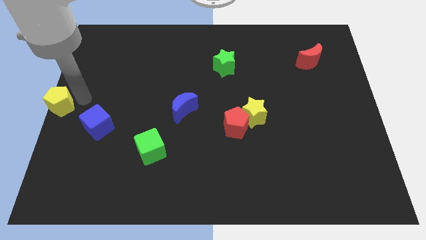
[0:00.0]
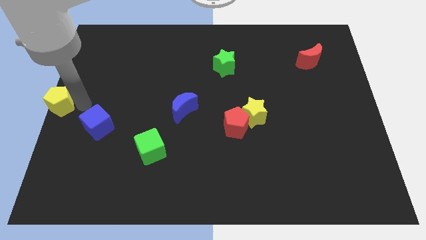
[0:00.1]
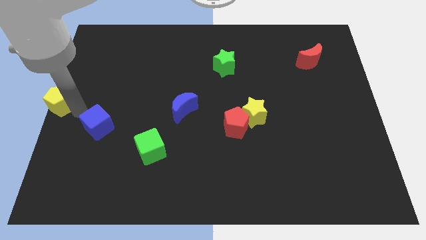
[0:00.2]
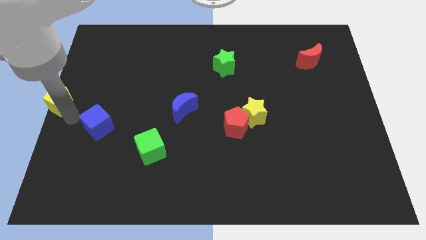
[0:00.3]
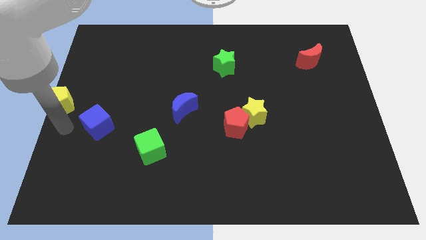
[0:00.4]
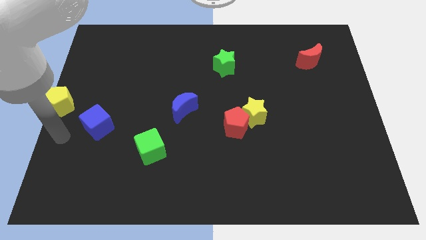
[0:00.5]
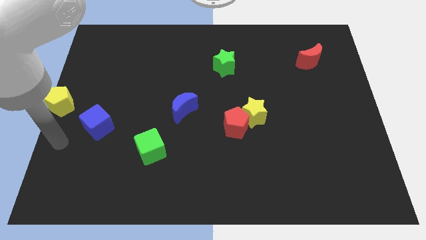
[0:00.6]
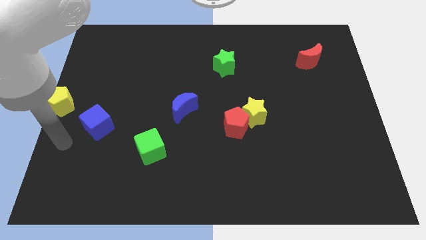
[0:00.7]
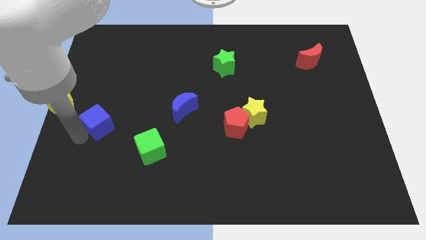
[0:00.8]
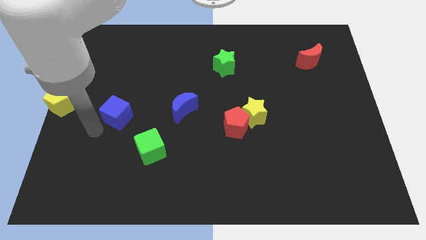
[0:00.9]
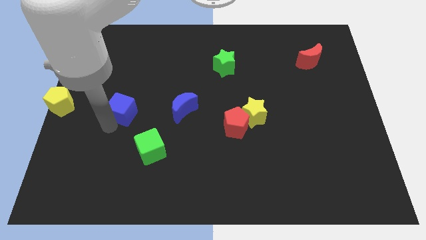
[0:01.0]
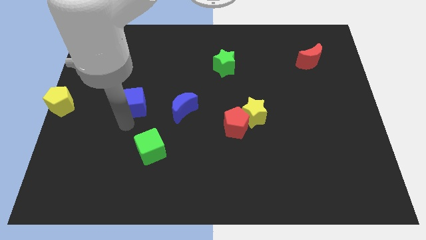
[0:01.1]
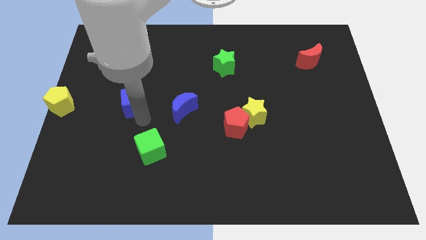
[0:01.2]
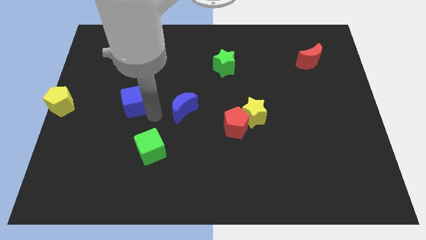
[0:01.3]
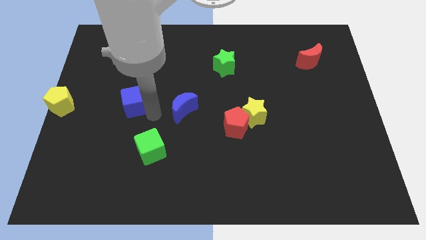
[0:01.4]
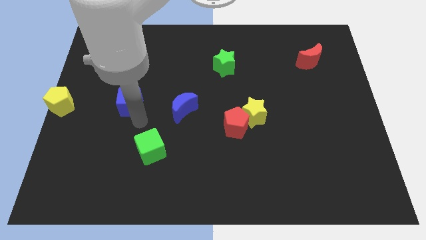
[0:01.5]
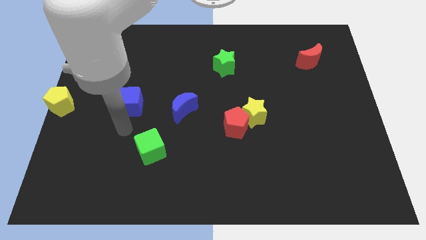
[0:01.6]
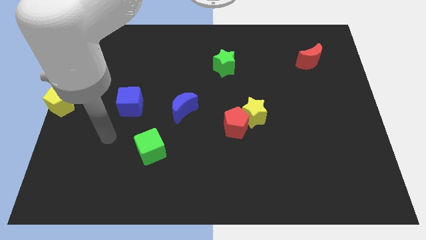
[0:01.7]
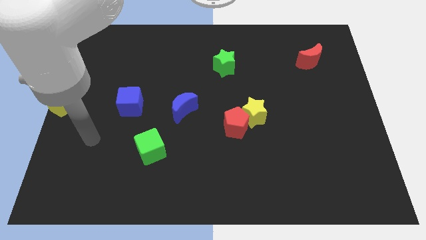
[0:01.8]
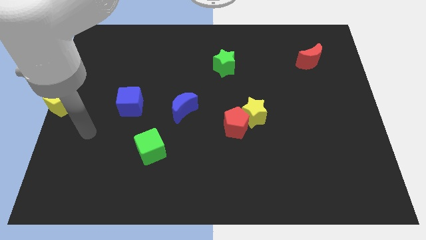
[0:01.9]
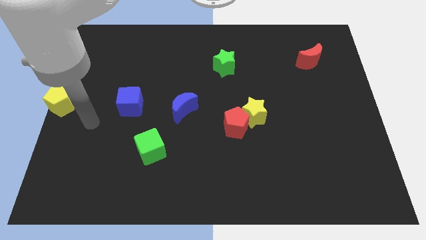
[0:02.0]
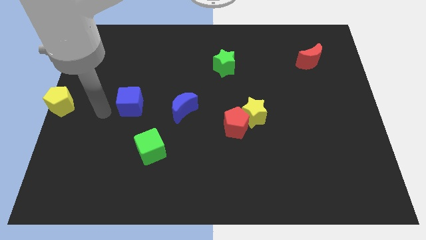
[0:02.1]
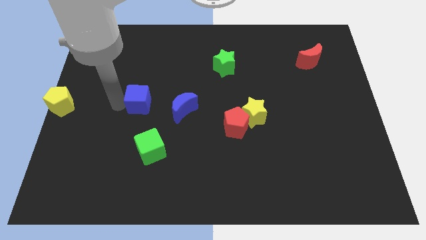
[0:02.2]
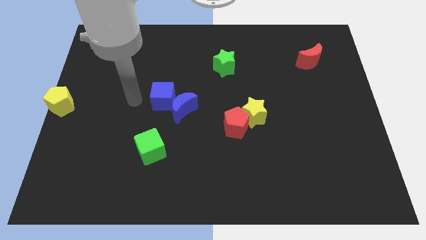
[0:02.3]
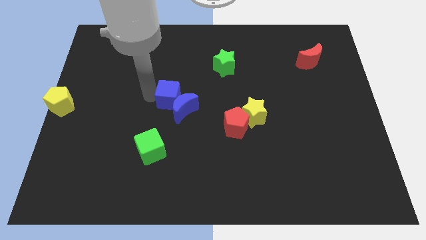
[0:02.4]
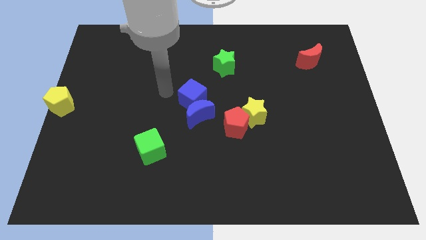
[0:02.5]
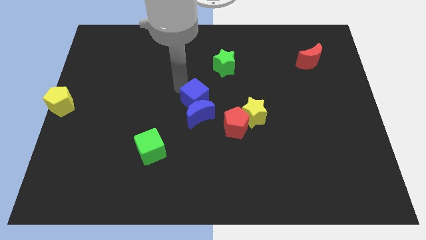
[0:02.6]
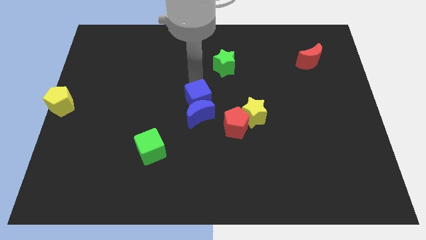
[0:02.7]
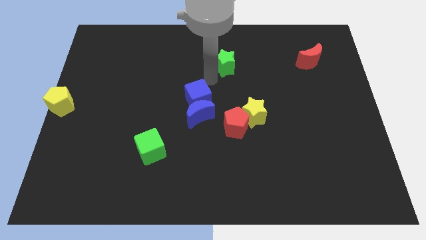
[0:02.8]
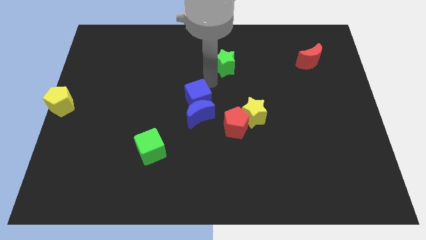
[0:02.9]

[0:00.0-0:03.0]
push blue cube to center of the board

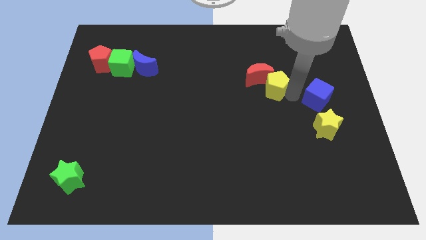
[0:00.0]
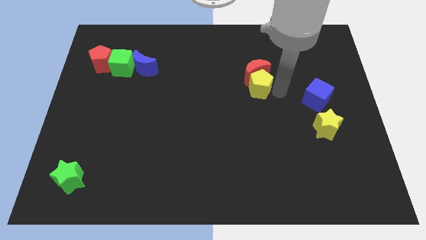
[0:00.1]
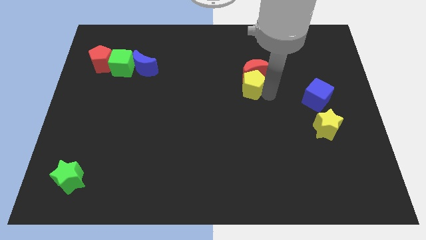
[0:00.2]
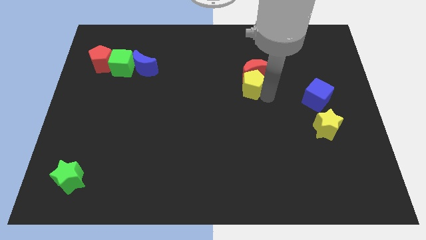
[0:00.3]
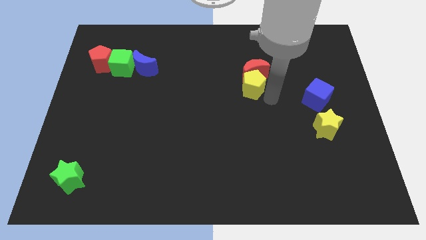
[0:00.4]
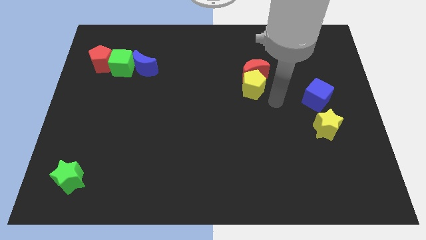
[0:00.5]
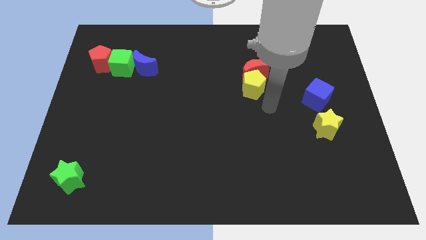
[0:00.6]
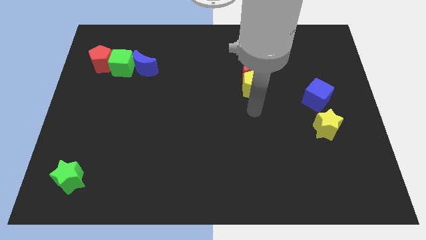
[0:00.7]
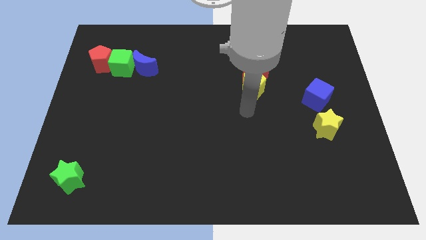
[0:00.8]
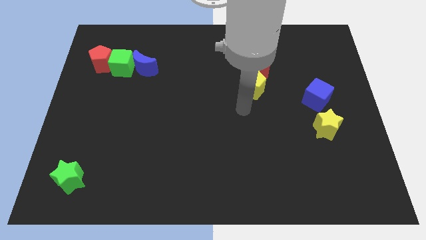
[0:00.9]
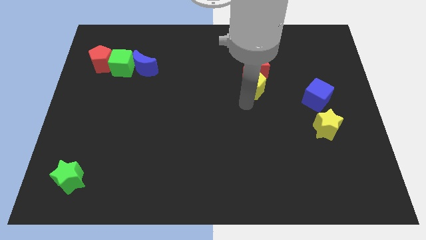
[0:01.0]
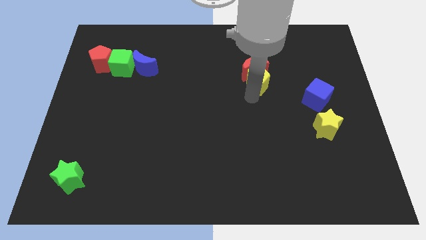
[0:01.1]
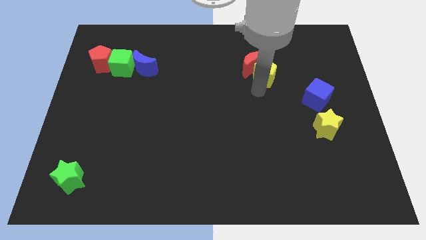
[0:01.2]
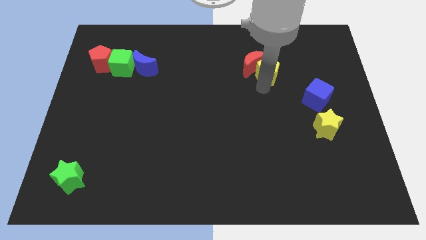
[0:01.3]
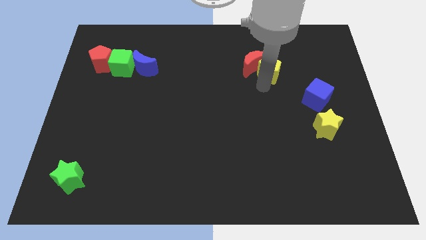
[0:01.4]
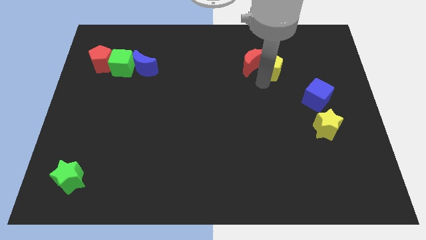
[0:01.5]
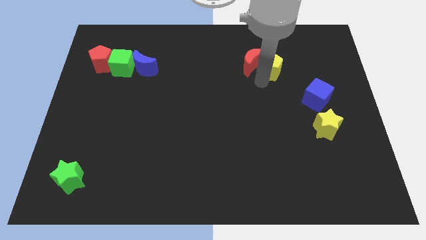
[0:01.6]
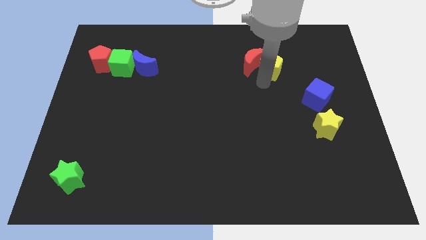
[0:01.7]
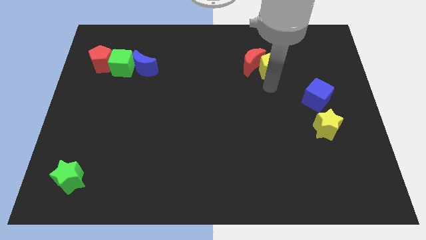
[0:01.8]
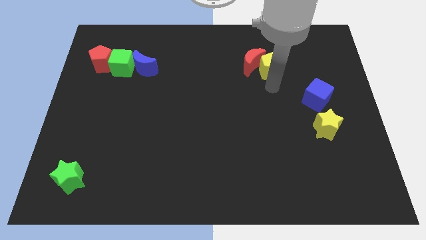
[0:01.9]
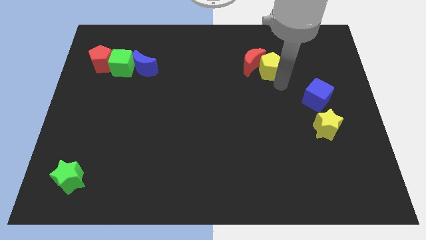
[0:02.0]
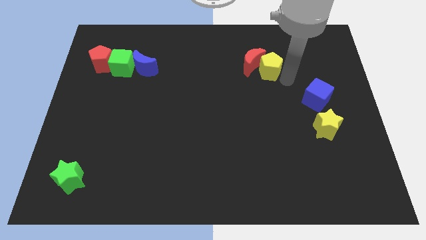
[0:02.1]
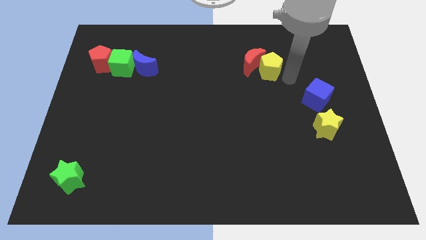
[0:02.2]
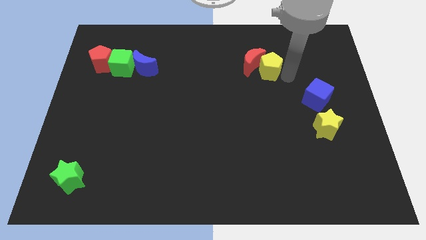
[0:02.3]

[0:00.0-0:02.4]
move yellow pentagon and red moon slightly up

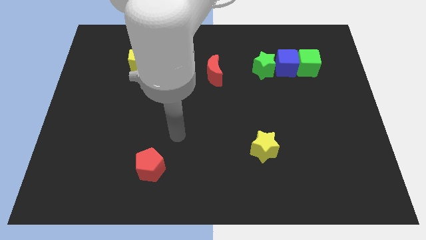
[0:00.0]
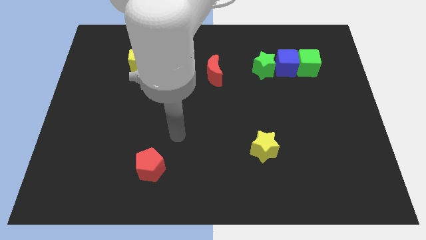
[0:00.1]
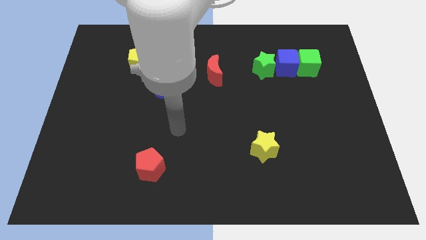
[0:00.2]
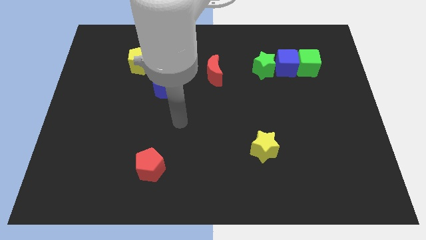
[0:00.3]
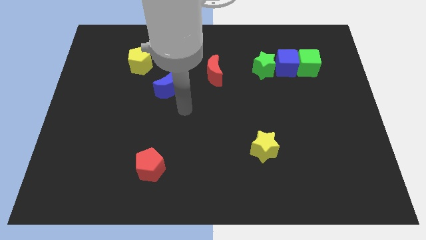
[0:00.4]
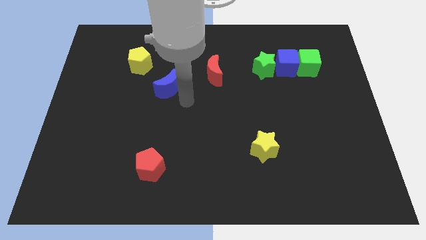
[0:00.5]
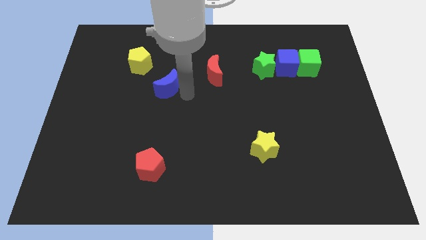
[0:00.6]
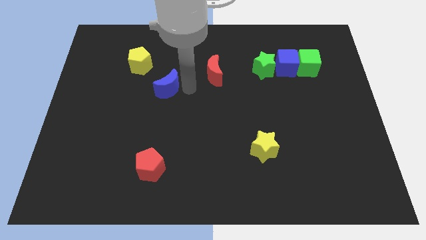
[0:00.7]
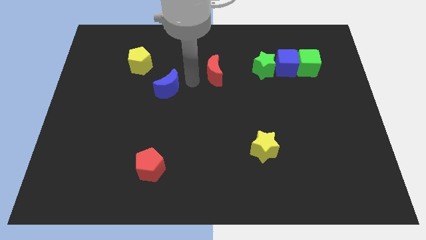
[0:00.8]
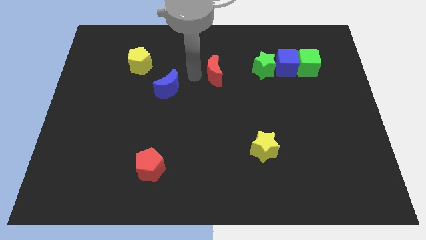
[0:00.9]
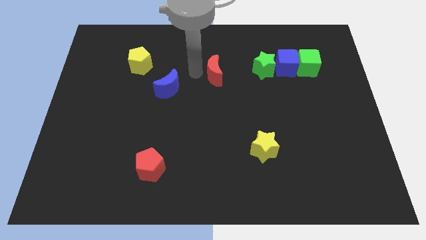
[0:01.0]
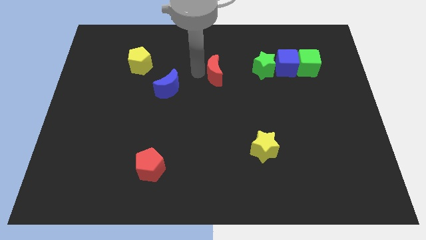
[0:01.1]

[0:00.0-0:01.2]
move your arm to the left of the red crescent

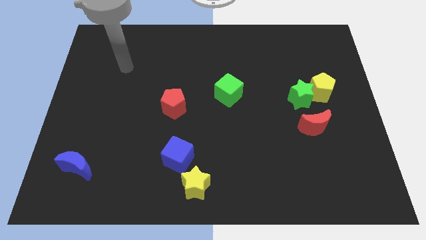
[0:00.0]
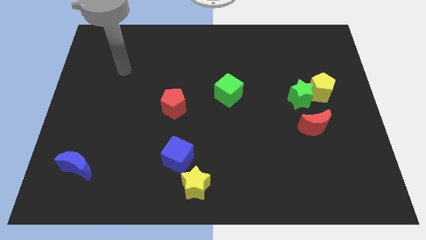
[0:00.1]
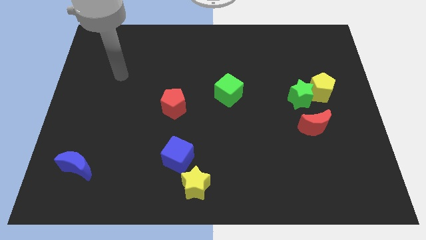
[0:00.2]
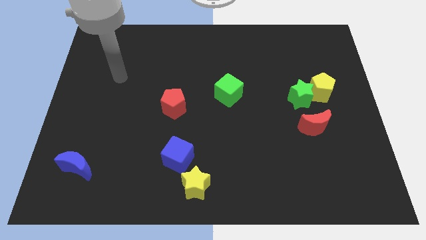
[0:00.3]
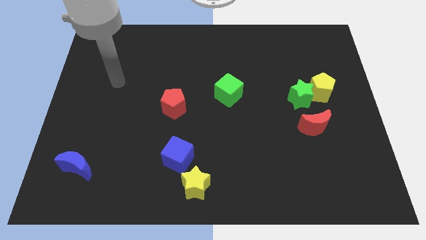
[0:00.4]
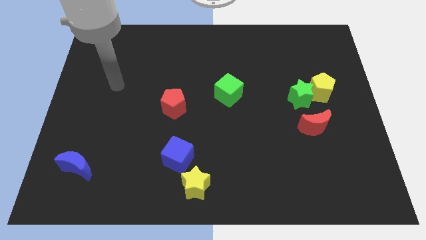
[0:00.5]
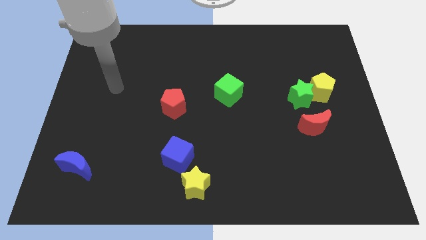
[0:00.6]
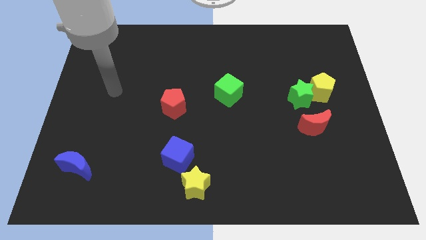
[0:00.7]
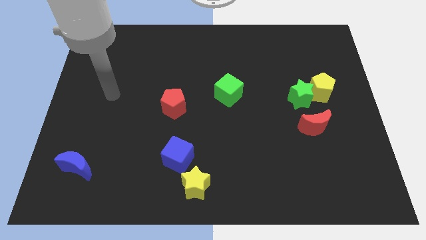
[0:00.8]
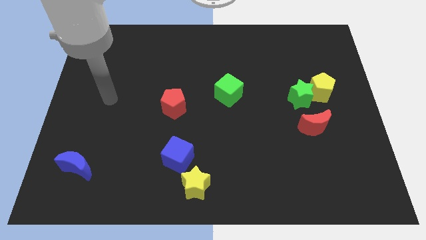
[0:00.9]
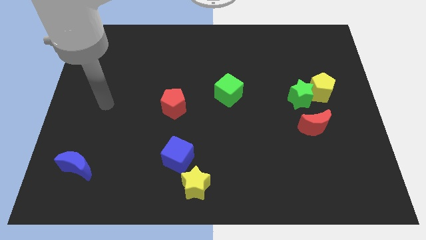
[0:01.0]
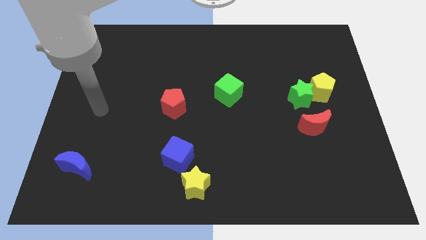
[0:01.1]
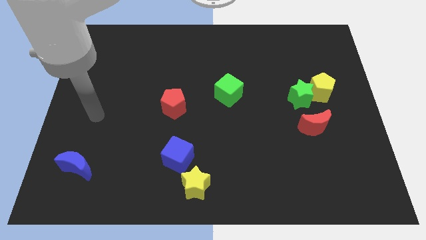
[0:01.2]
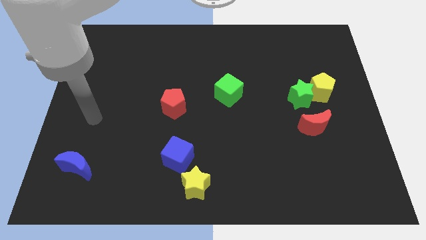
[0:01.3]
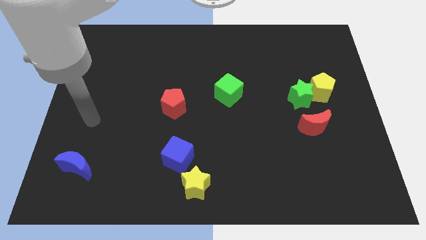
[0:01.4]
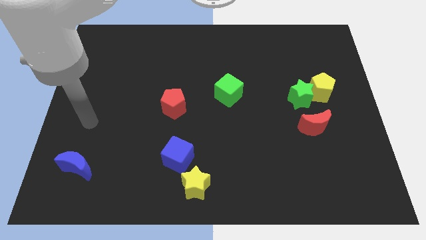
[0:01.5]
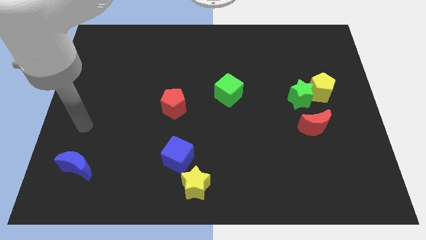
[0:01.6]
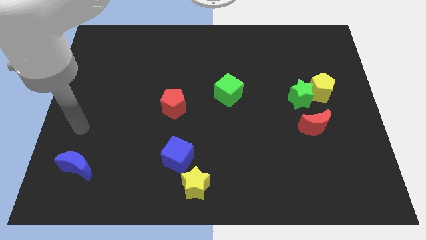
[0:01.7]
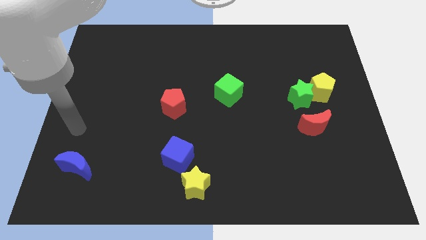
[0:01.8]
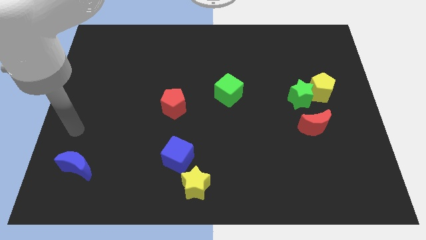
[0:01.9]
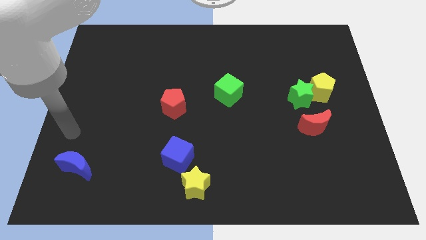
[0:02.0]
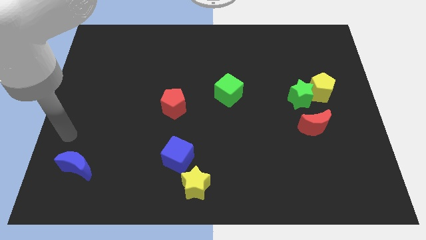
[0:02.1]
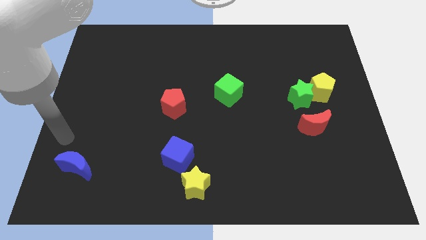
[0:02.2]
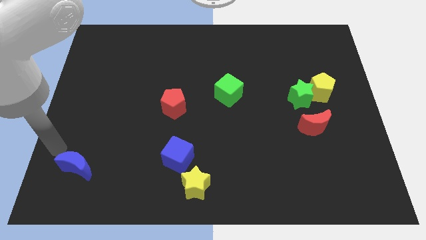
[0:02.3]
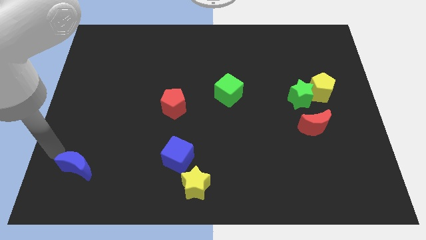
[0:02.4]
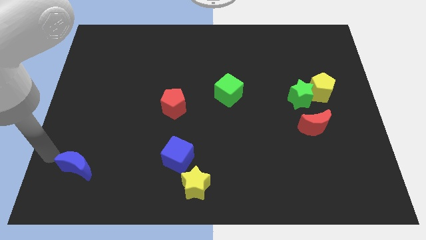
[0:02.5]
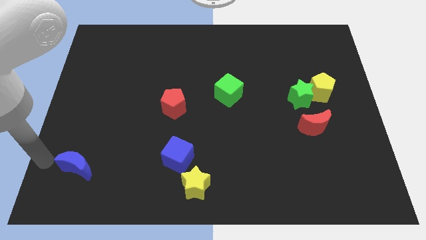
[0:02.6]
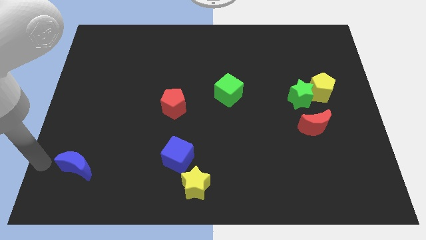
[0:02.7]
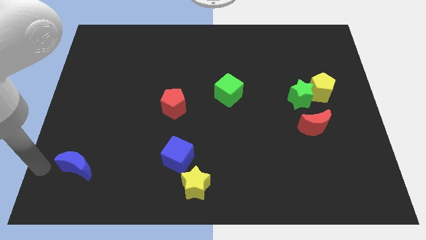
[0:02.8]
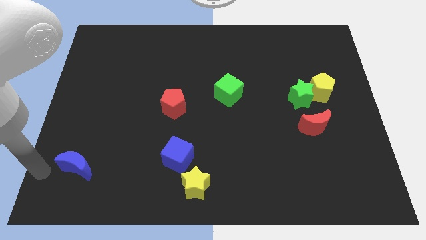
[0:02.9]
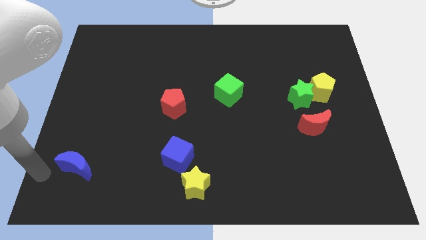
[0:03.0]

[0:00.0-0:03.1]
move your arm to the left side of the blue moon
